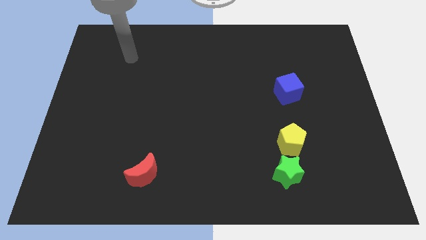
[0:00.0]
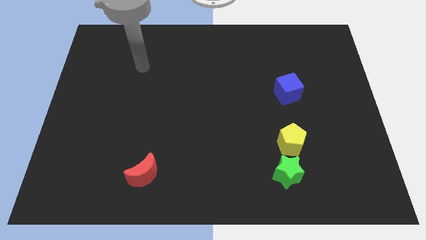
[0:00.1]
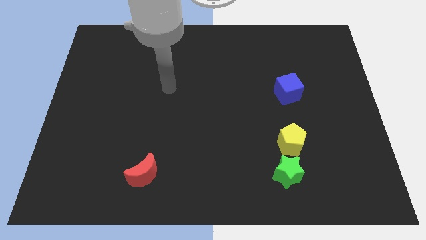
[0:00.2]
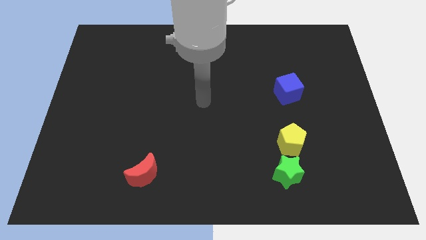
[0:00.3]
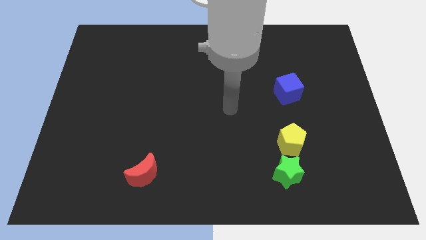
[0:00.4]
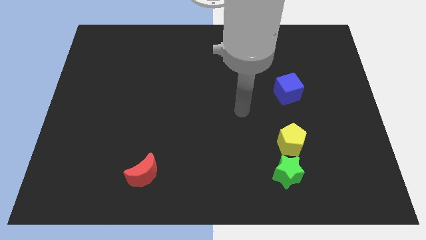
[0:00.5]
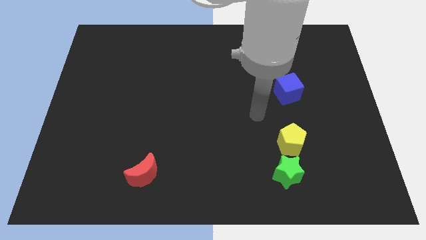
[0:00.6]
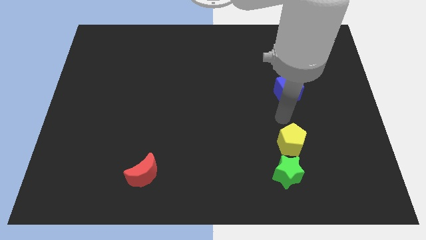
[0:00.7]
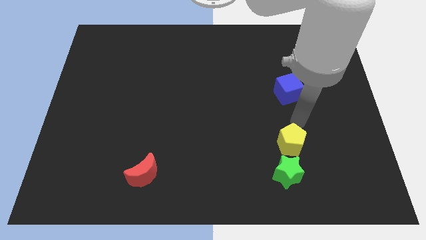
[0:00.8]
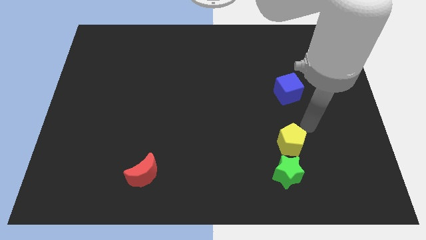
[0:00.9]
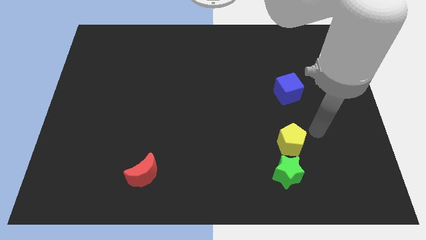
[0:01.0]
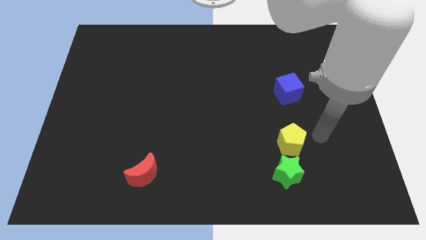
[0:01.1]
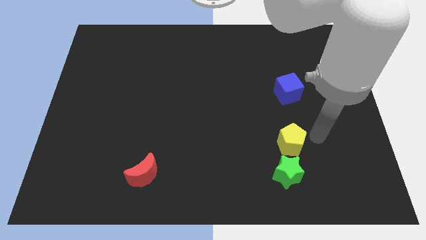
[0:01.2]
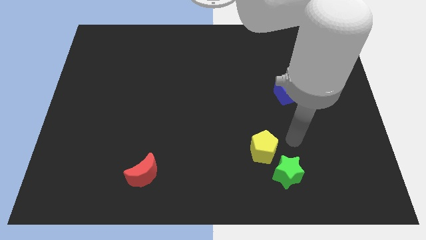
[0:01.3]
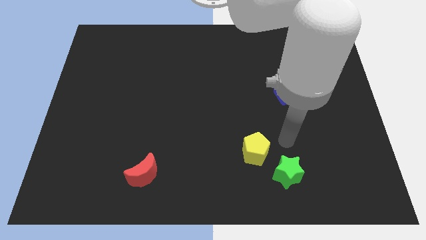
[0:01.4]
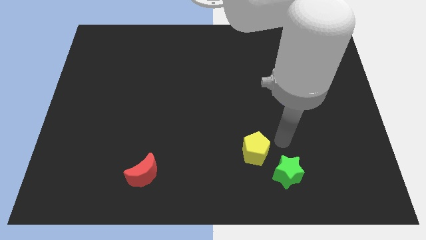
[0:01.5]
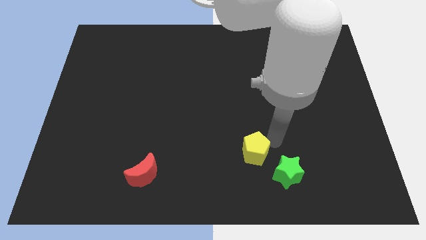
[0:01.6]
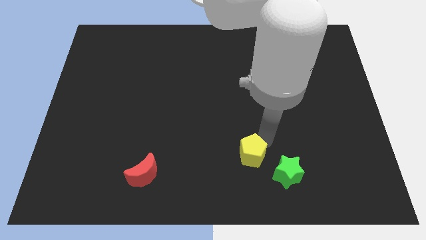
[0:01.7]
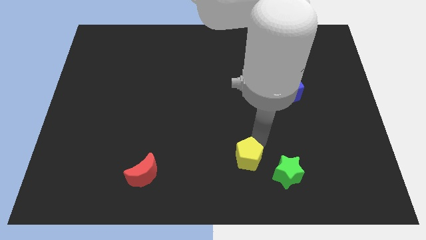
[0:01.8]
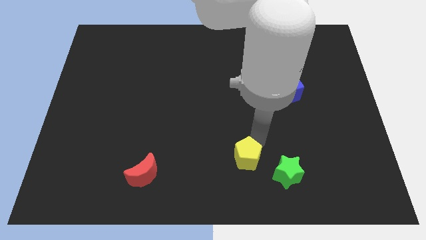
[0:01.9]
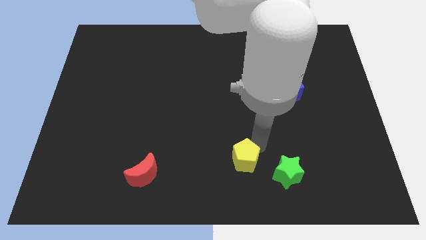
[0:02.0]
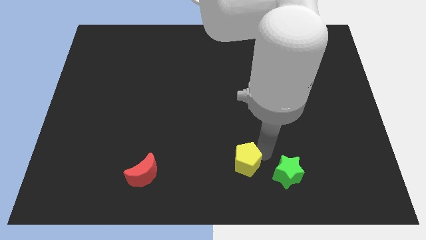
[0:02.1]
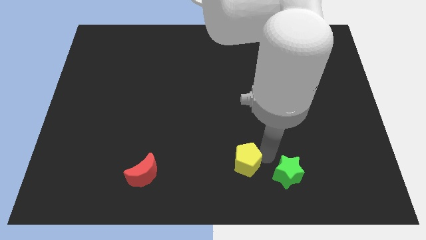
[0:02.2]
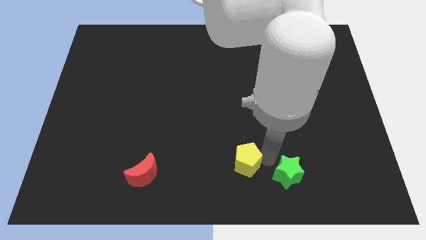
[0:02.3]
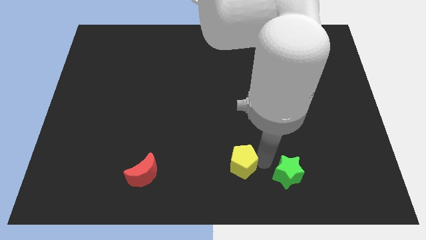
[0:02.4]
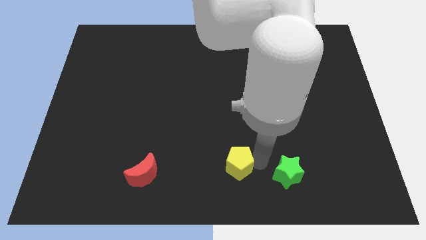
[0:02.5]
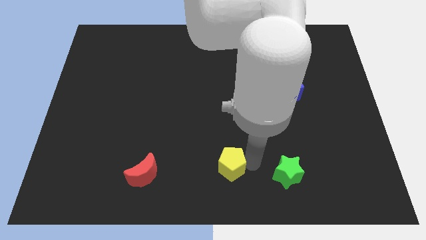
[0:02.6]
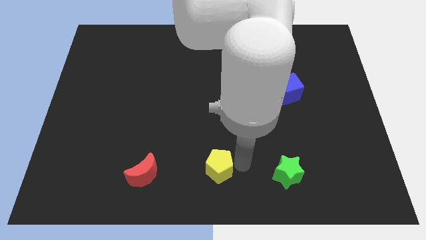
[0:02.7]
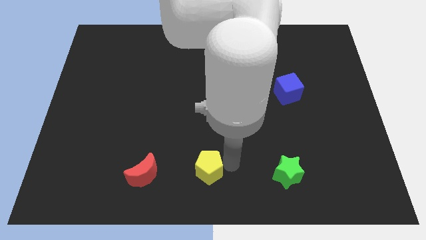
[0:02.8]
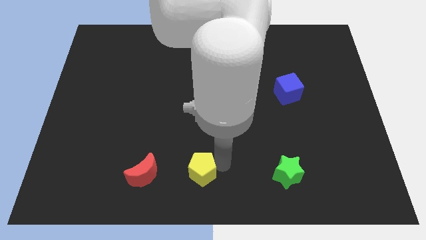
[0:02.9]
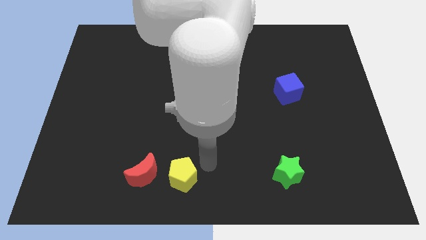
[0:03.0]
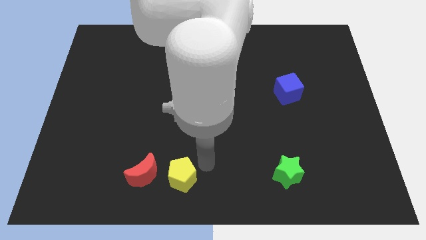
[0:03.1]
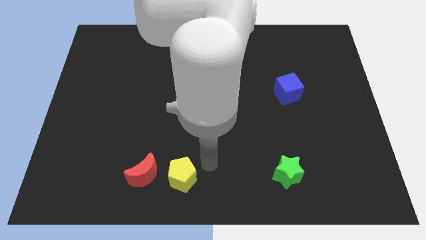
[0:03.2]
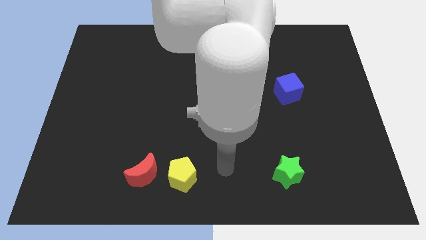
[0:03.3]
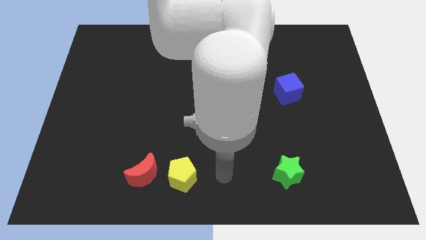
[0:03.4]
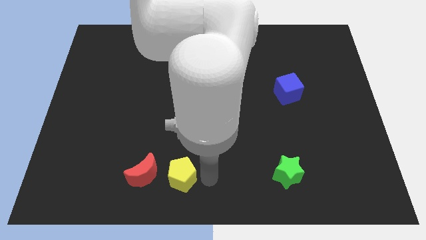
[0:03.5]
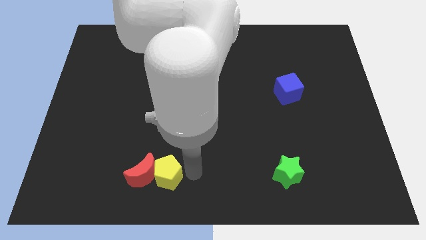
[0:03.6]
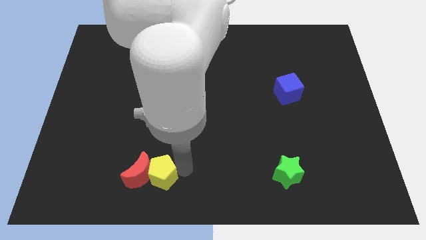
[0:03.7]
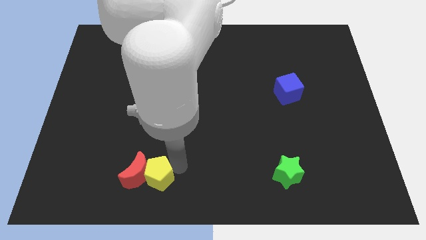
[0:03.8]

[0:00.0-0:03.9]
move the pentagon next to the moon

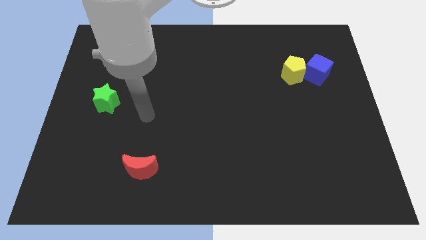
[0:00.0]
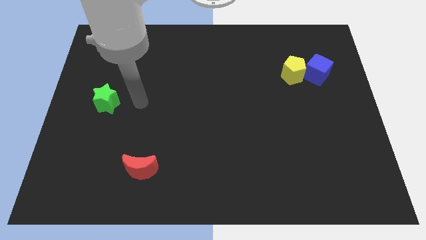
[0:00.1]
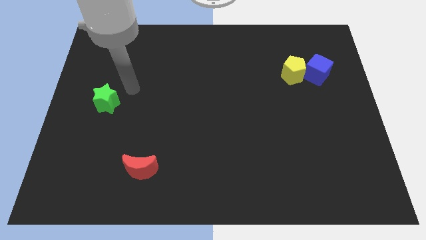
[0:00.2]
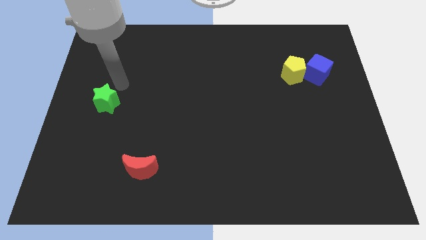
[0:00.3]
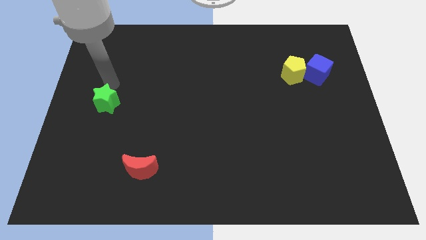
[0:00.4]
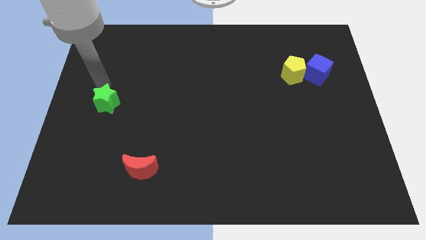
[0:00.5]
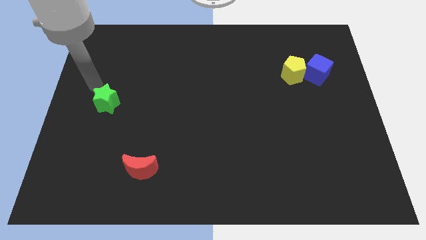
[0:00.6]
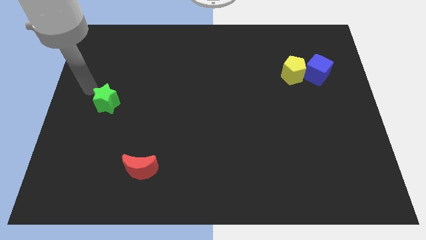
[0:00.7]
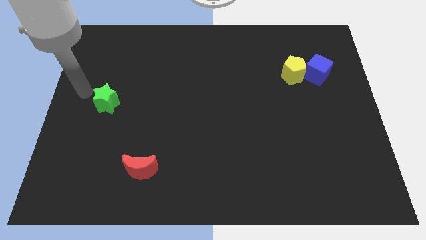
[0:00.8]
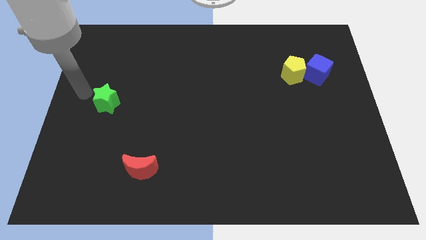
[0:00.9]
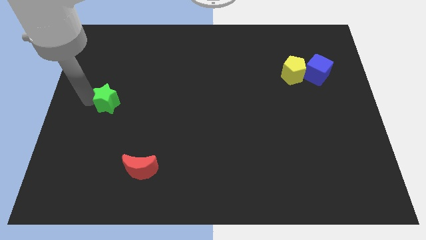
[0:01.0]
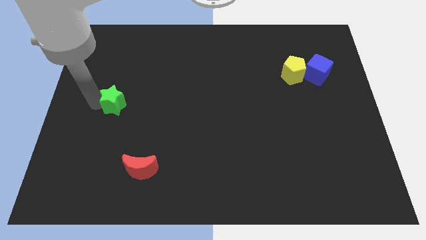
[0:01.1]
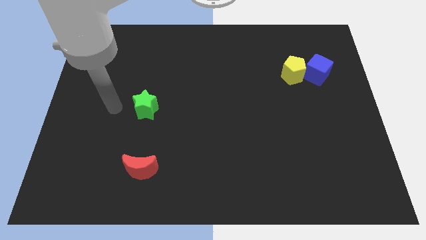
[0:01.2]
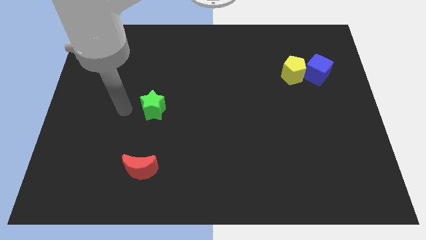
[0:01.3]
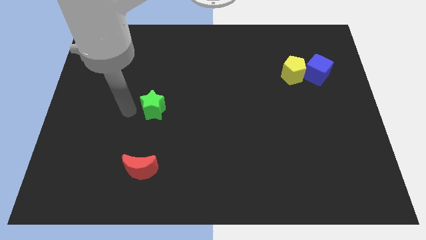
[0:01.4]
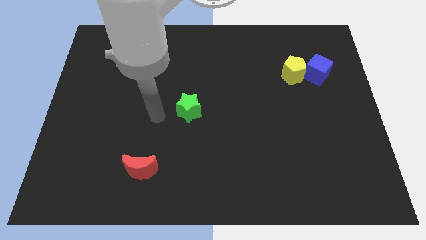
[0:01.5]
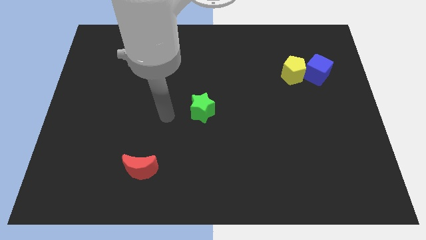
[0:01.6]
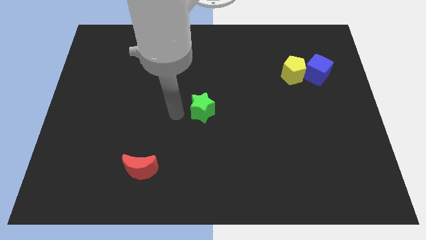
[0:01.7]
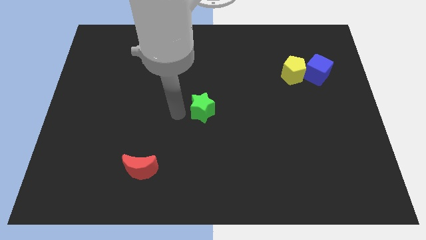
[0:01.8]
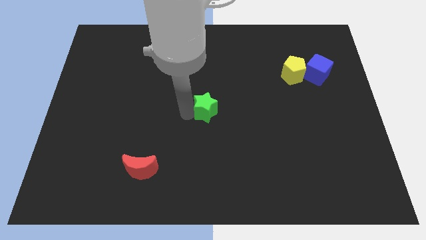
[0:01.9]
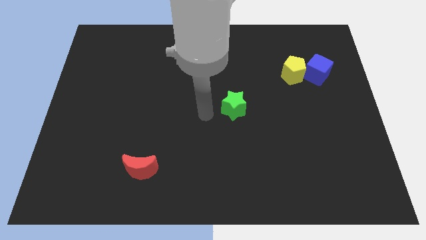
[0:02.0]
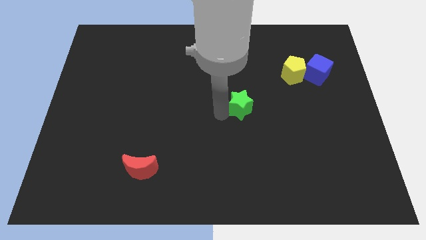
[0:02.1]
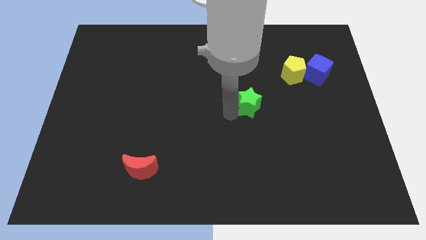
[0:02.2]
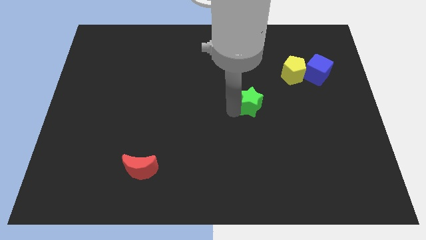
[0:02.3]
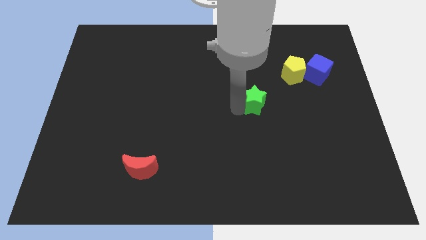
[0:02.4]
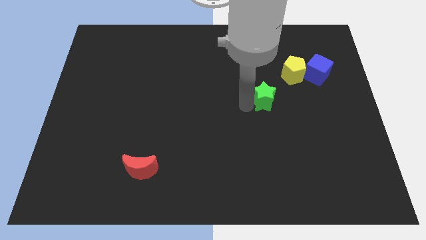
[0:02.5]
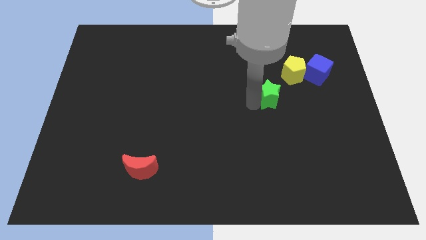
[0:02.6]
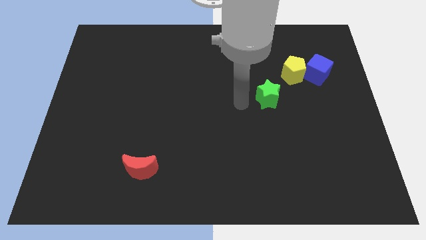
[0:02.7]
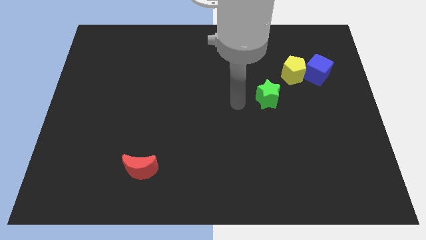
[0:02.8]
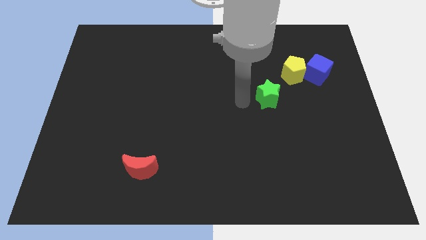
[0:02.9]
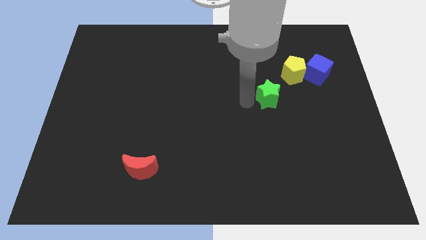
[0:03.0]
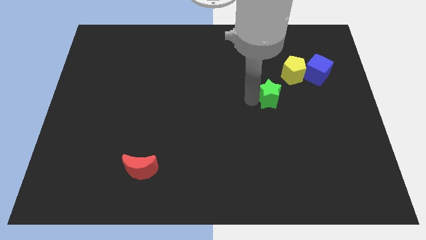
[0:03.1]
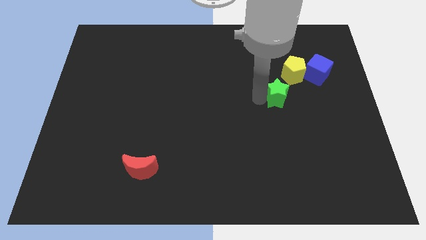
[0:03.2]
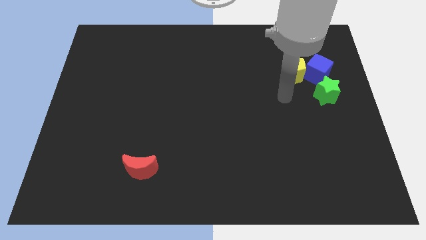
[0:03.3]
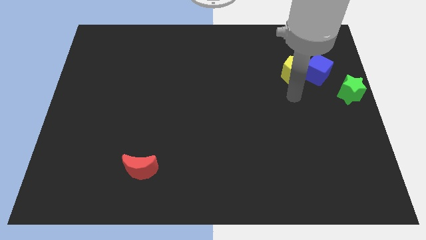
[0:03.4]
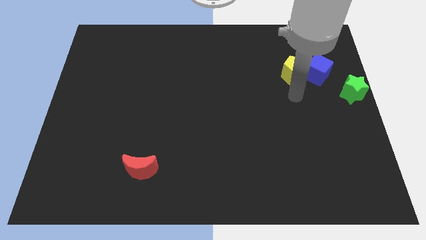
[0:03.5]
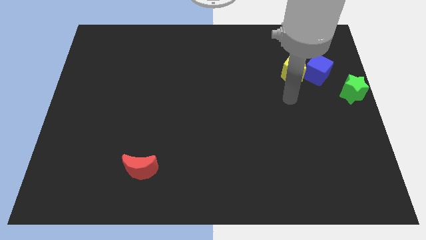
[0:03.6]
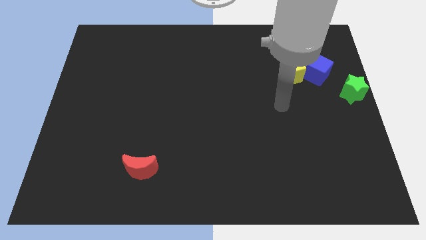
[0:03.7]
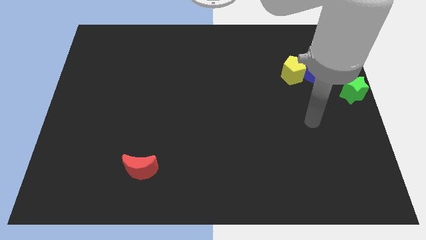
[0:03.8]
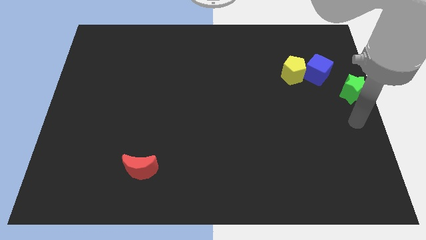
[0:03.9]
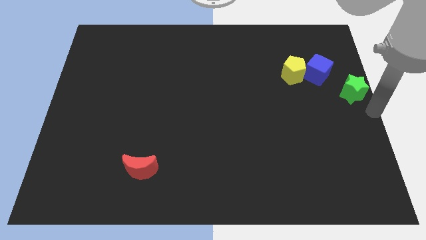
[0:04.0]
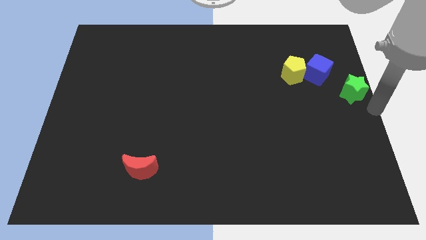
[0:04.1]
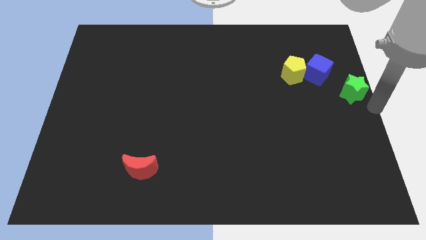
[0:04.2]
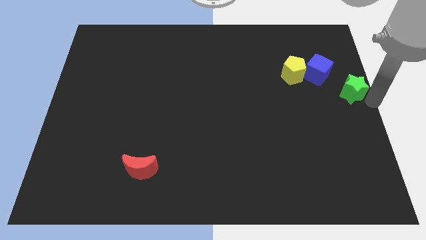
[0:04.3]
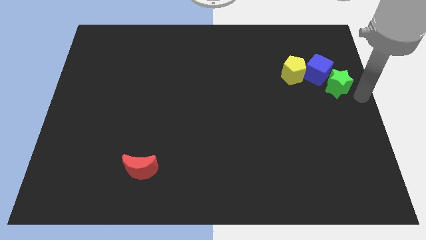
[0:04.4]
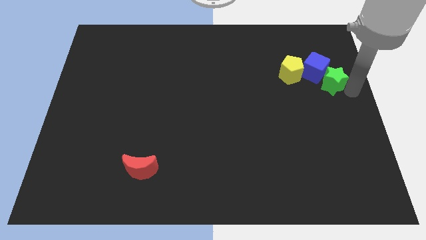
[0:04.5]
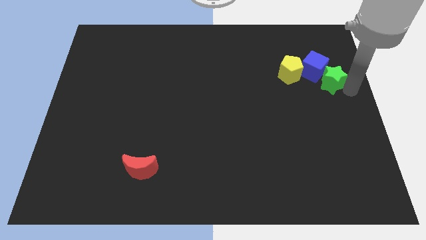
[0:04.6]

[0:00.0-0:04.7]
move the green star next to the cube
